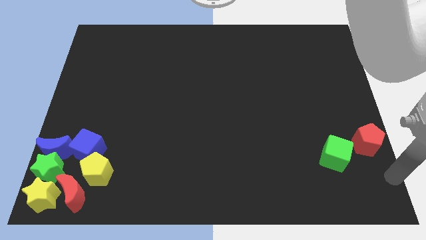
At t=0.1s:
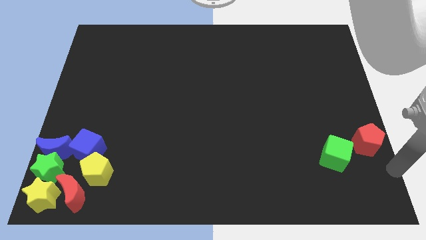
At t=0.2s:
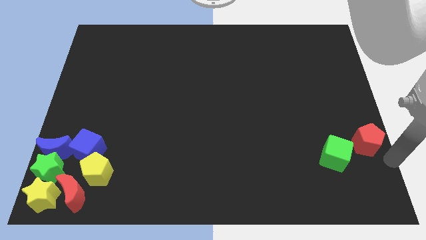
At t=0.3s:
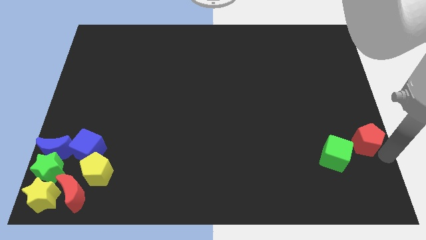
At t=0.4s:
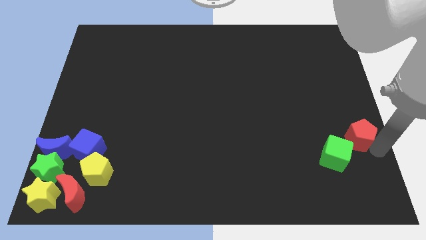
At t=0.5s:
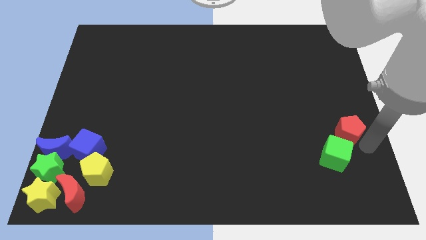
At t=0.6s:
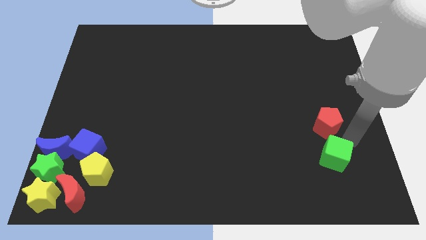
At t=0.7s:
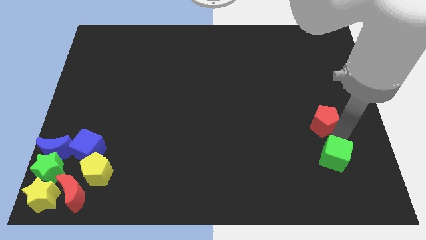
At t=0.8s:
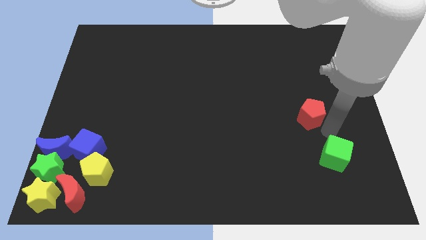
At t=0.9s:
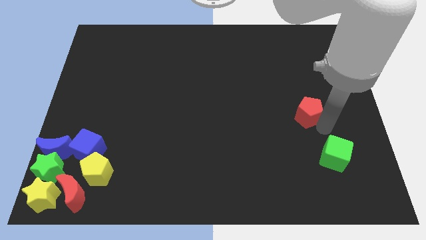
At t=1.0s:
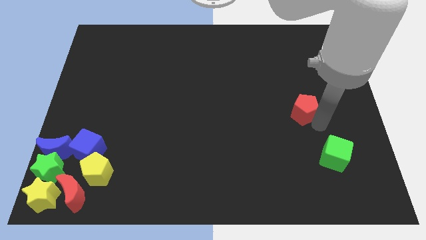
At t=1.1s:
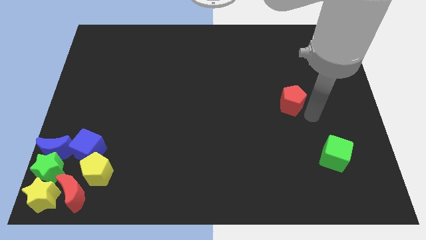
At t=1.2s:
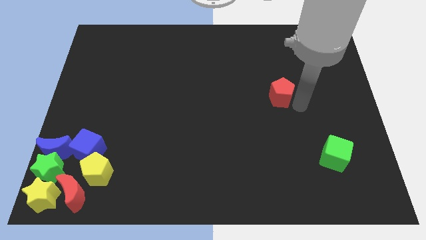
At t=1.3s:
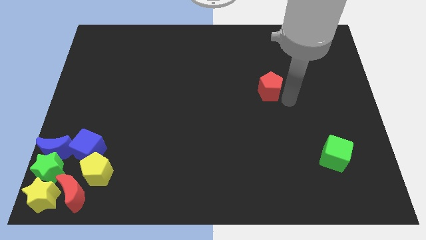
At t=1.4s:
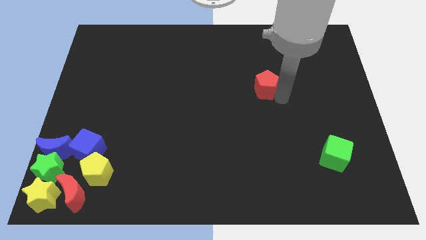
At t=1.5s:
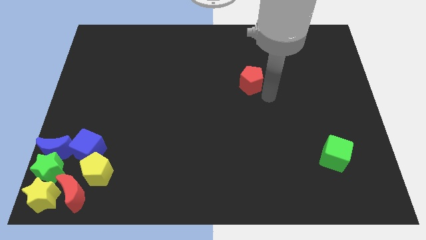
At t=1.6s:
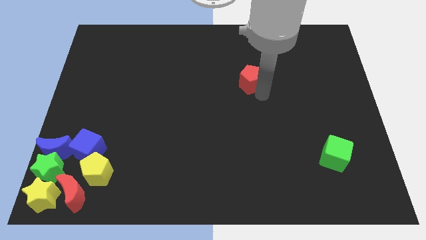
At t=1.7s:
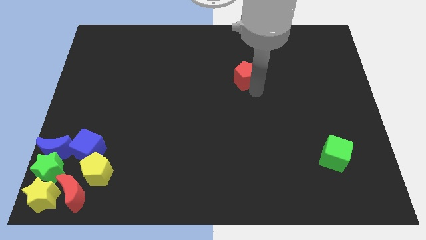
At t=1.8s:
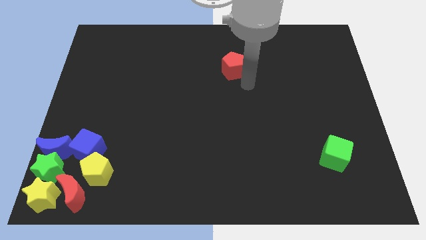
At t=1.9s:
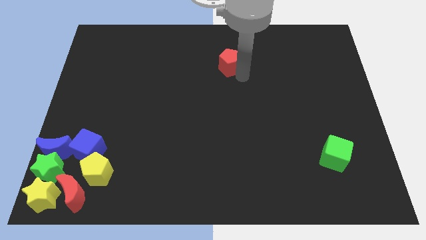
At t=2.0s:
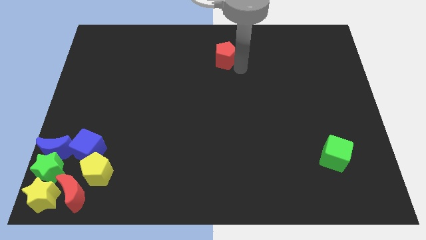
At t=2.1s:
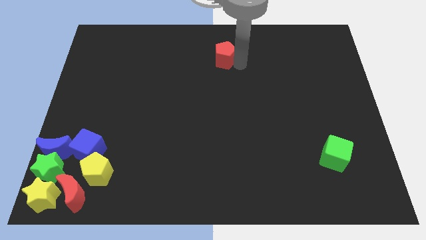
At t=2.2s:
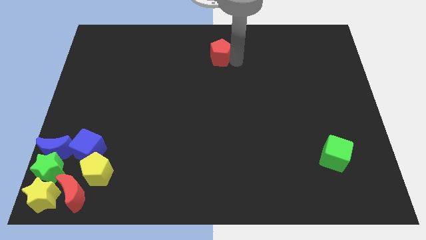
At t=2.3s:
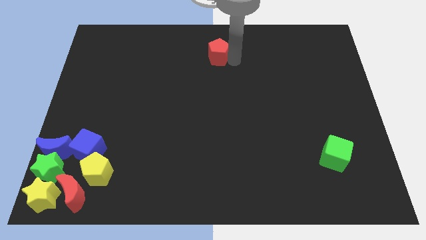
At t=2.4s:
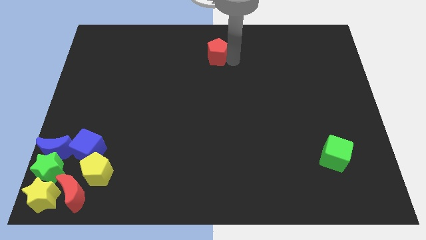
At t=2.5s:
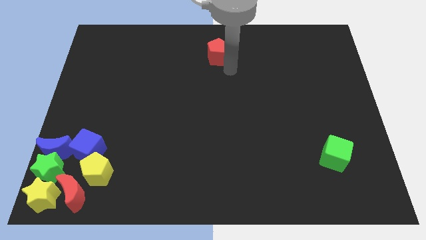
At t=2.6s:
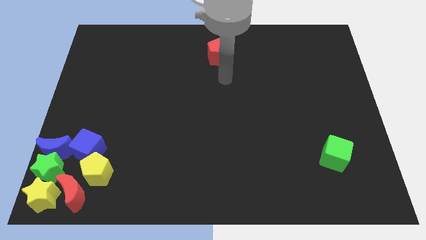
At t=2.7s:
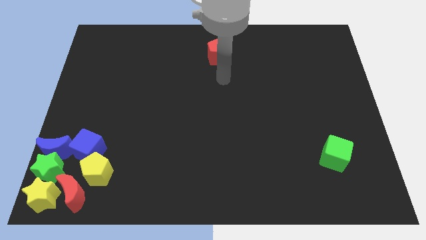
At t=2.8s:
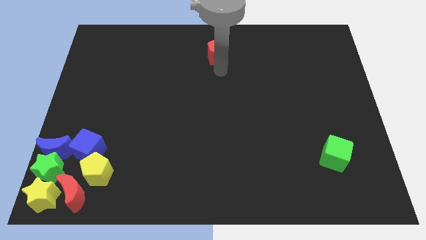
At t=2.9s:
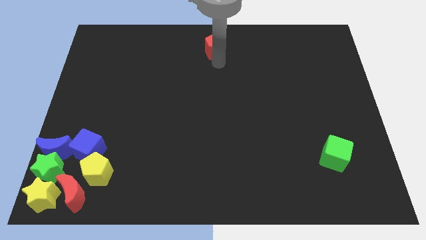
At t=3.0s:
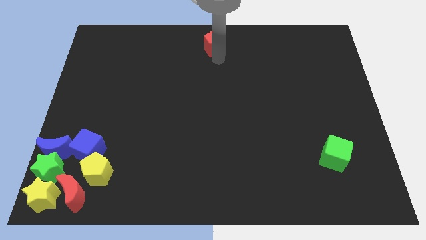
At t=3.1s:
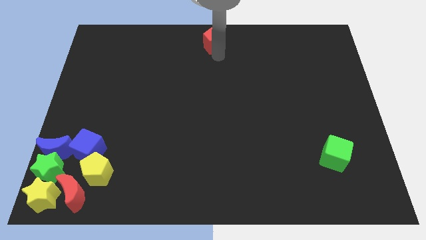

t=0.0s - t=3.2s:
move the red pentagon away from the green cube

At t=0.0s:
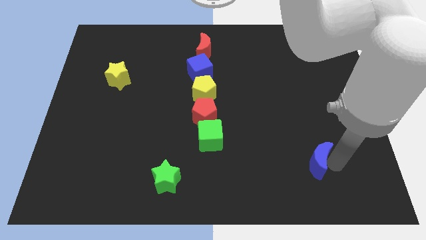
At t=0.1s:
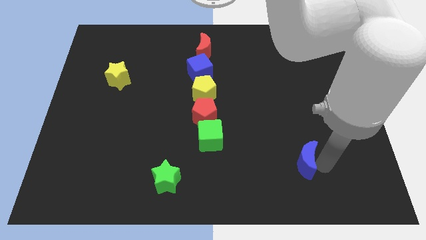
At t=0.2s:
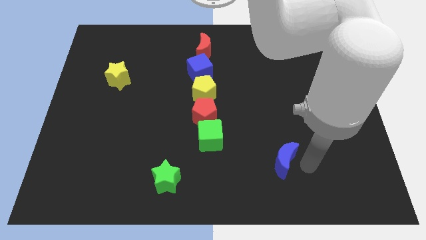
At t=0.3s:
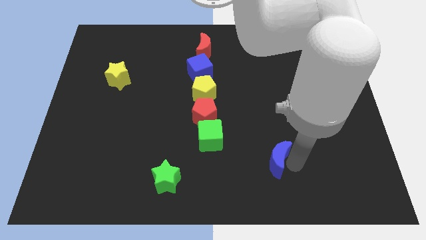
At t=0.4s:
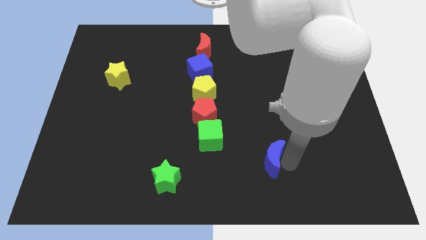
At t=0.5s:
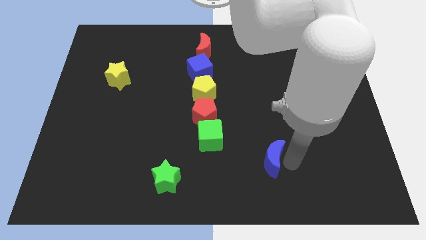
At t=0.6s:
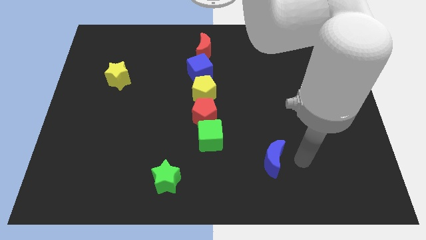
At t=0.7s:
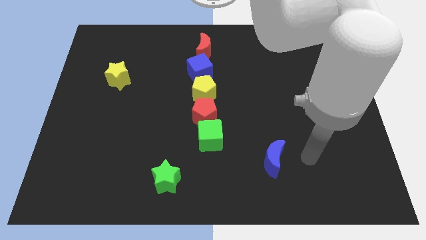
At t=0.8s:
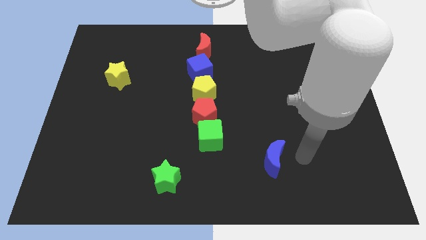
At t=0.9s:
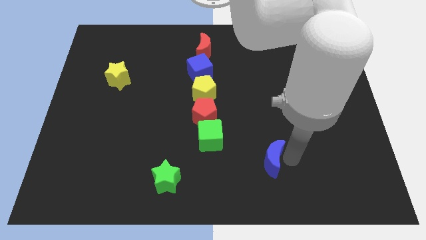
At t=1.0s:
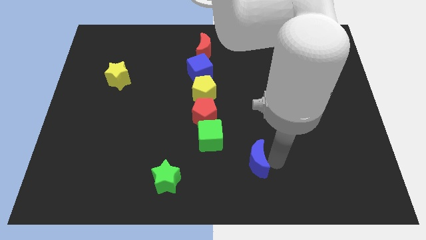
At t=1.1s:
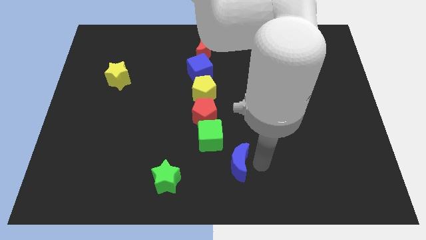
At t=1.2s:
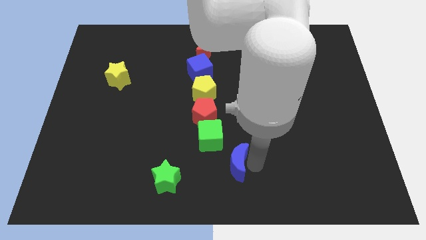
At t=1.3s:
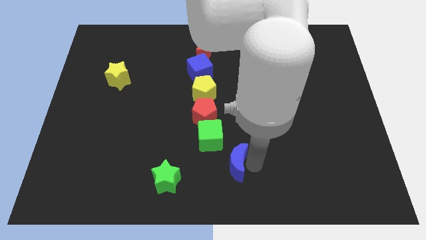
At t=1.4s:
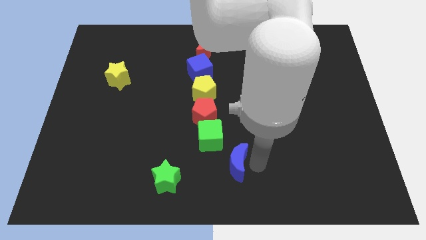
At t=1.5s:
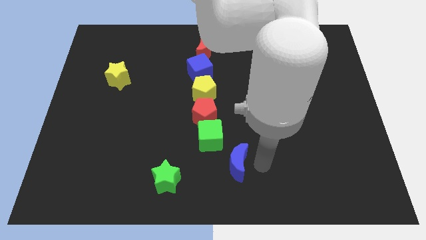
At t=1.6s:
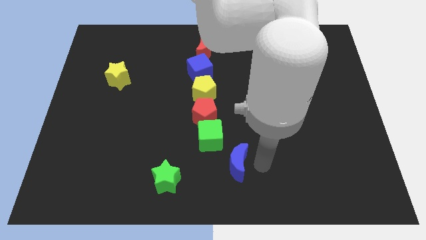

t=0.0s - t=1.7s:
drag the blue crescent diagonally to the bottom right side of the green cube

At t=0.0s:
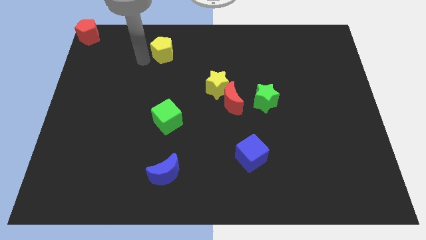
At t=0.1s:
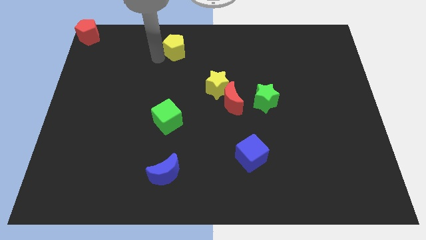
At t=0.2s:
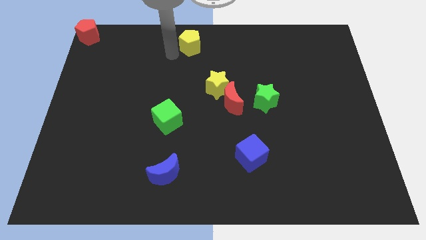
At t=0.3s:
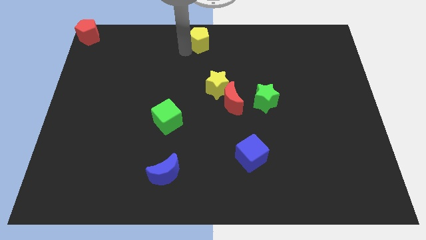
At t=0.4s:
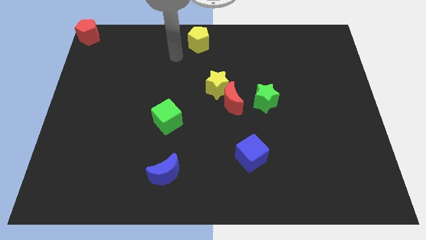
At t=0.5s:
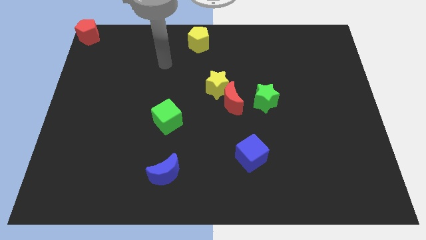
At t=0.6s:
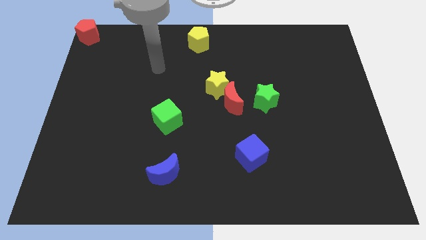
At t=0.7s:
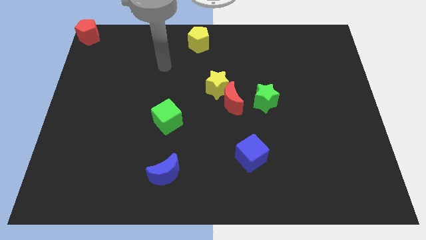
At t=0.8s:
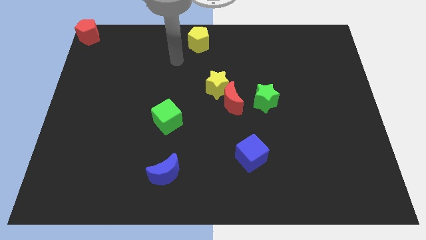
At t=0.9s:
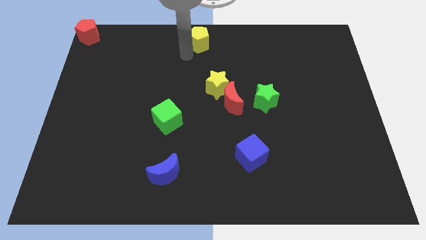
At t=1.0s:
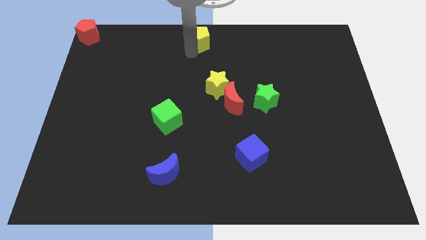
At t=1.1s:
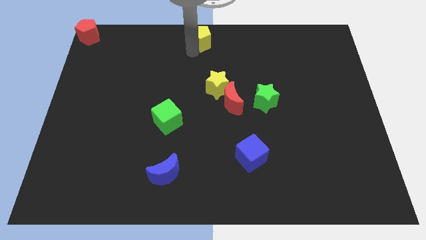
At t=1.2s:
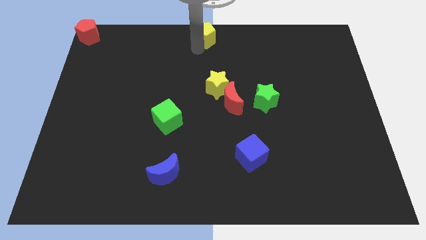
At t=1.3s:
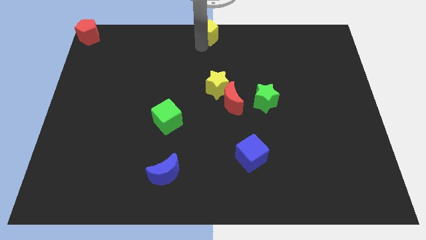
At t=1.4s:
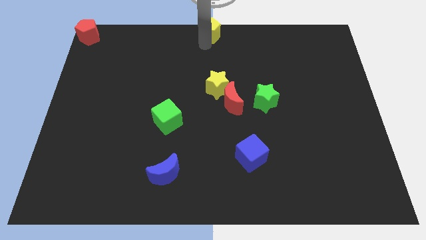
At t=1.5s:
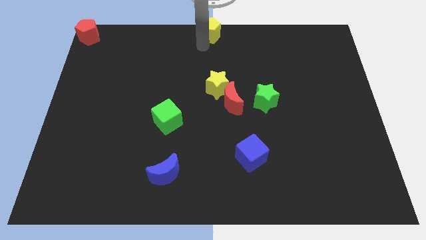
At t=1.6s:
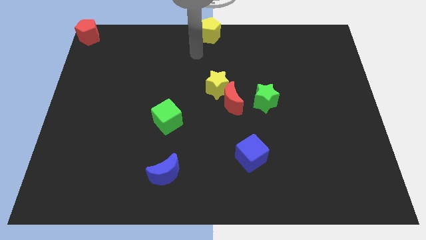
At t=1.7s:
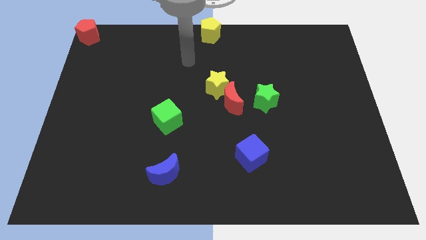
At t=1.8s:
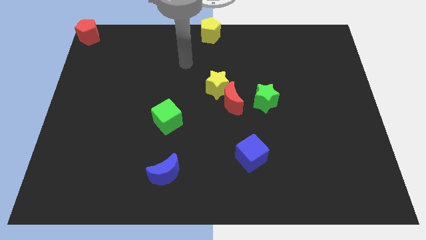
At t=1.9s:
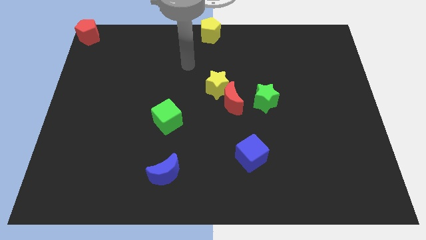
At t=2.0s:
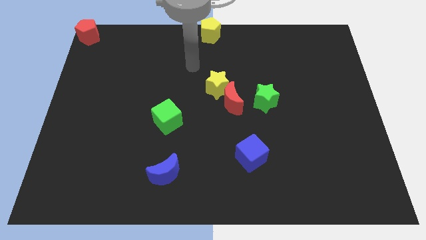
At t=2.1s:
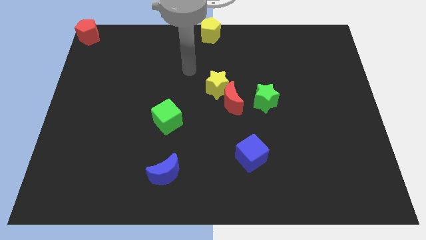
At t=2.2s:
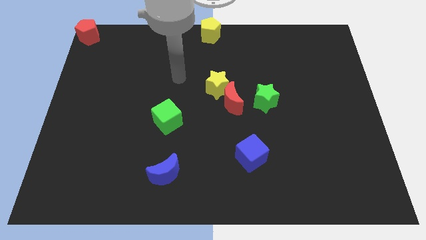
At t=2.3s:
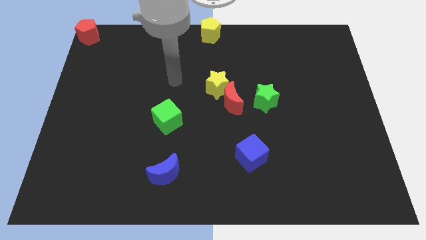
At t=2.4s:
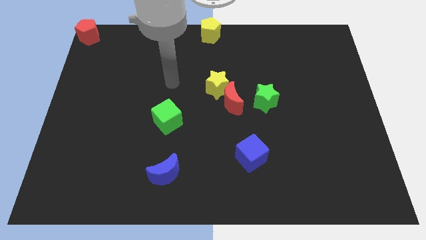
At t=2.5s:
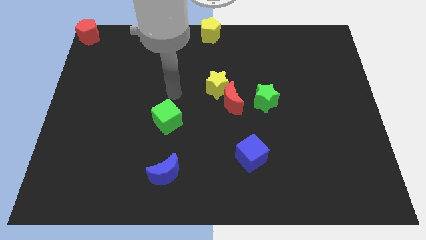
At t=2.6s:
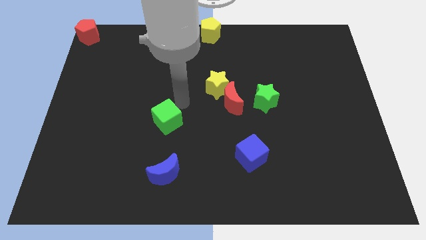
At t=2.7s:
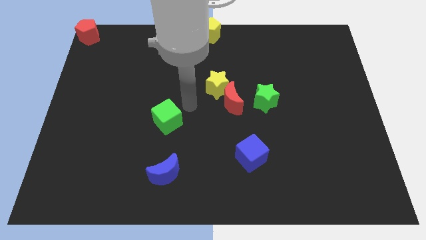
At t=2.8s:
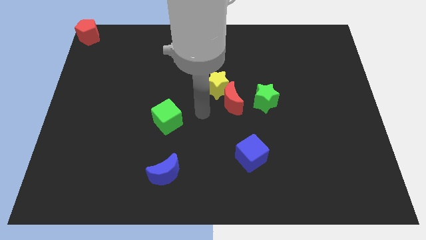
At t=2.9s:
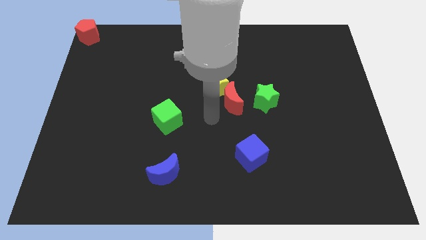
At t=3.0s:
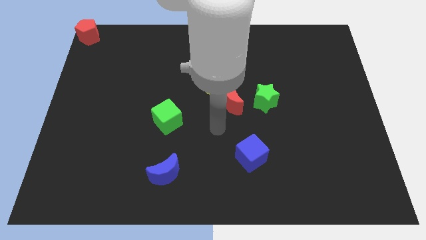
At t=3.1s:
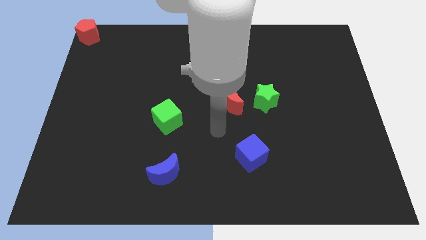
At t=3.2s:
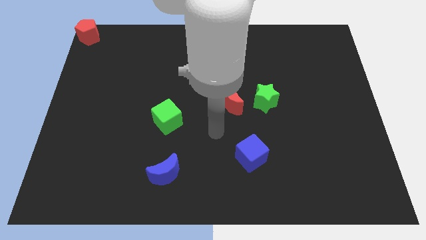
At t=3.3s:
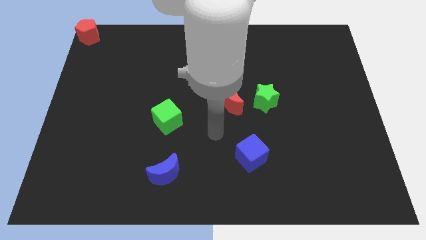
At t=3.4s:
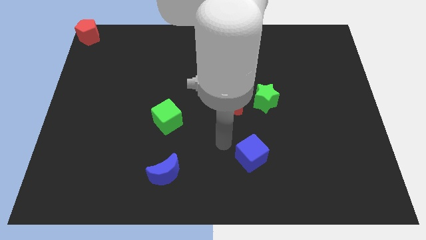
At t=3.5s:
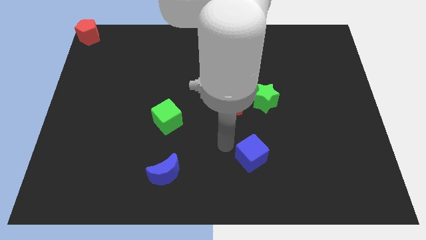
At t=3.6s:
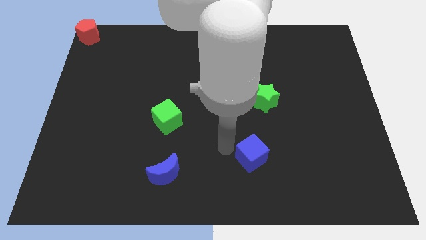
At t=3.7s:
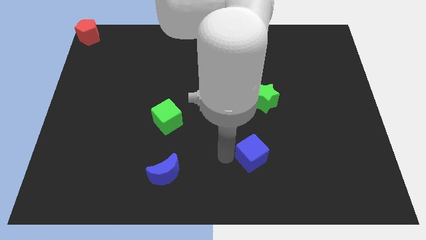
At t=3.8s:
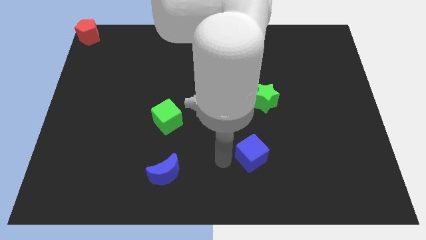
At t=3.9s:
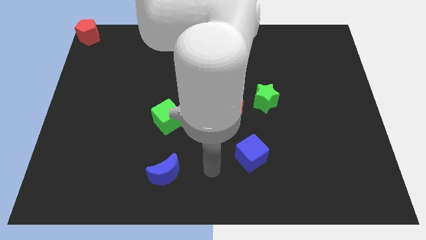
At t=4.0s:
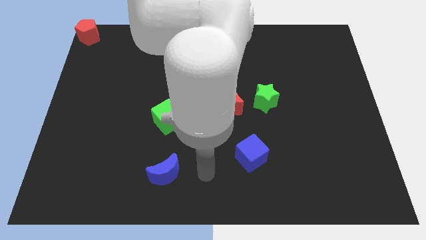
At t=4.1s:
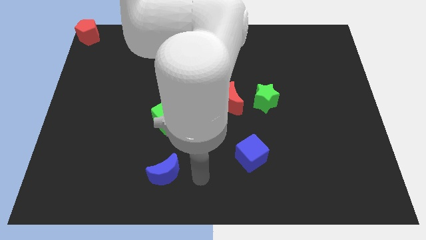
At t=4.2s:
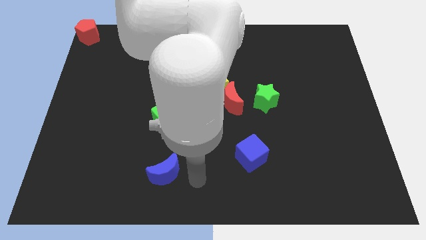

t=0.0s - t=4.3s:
slightly push the yellow pentagon to the top center
